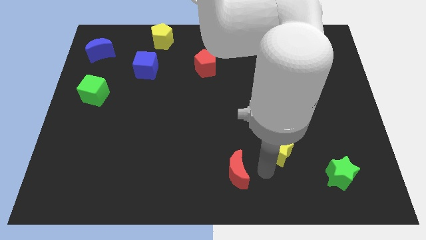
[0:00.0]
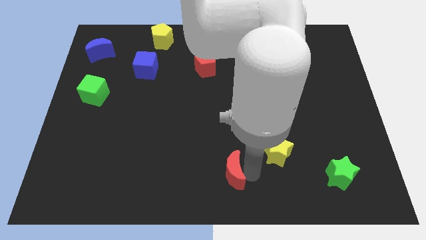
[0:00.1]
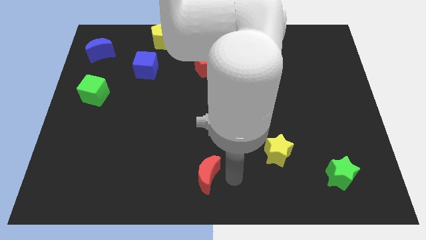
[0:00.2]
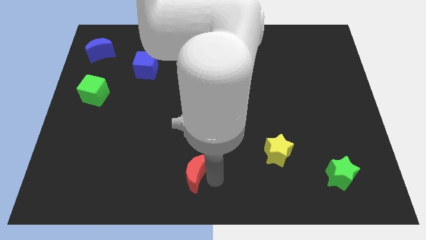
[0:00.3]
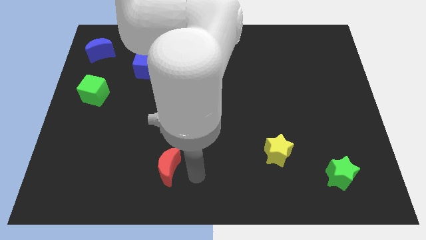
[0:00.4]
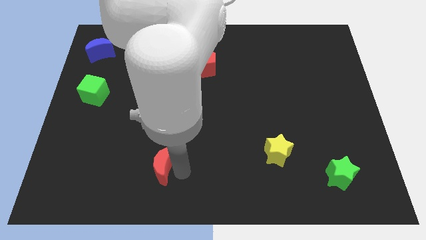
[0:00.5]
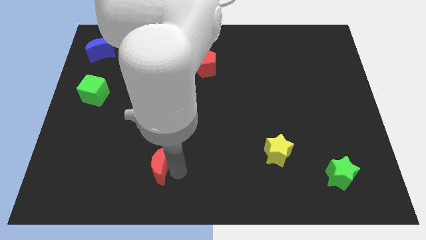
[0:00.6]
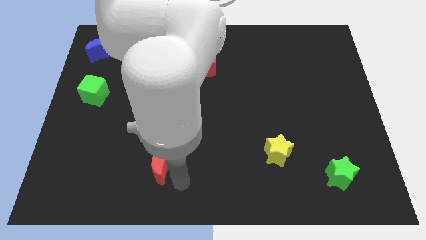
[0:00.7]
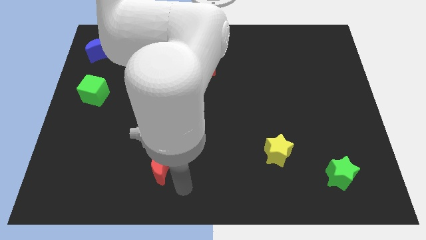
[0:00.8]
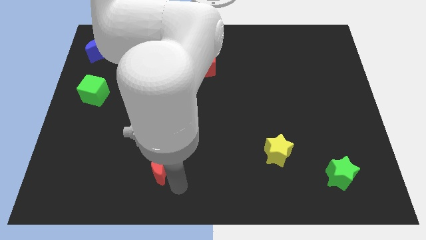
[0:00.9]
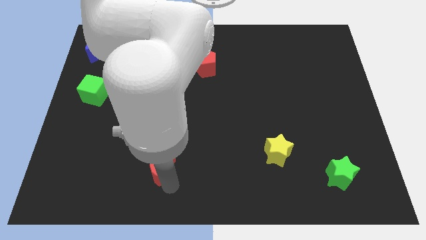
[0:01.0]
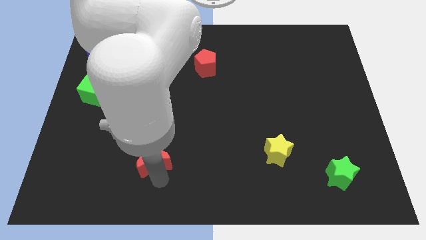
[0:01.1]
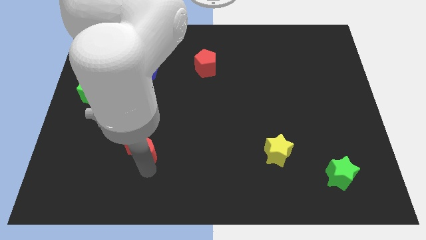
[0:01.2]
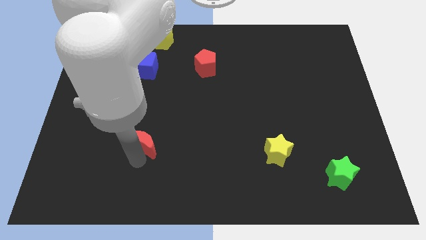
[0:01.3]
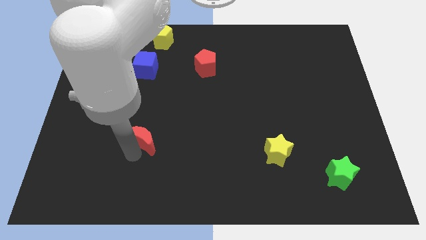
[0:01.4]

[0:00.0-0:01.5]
push the red moon slightly to the left of the board

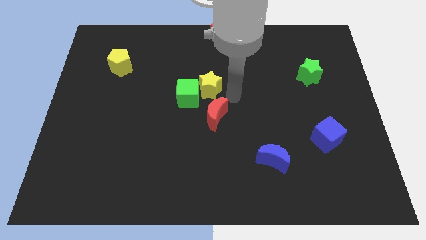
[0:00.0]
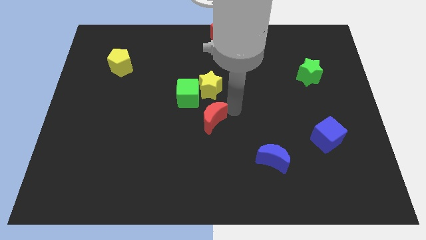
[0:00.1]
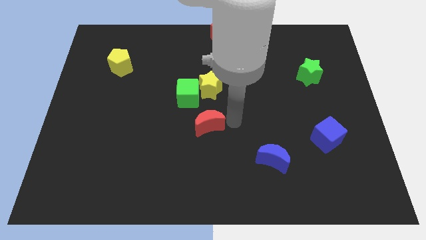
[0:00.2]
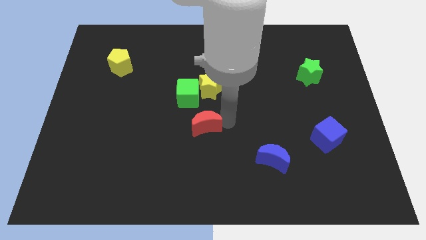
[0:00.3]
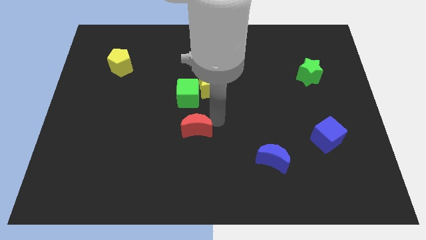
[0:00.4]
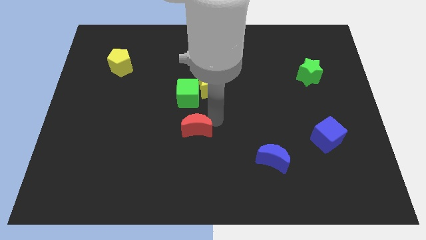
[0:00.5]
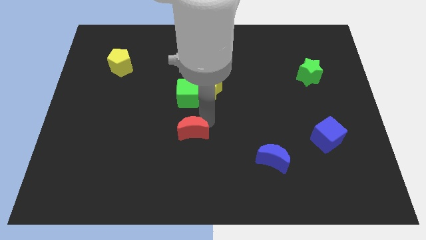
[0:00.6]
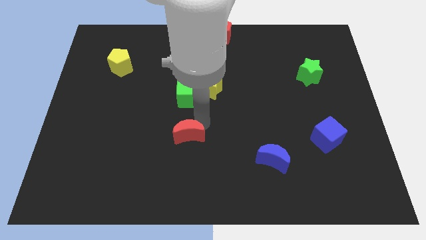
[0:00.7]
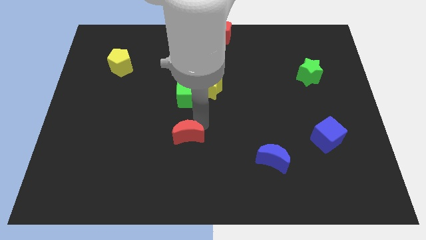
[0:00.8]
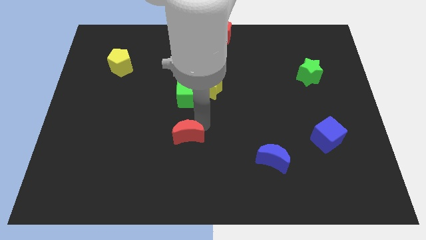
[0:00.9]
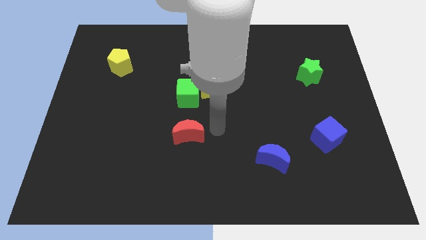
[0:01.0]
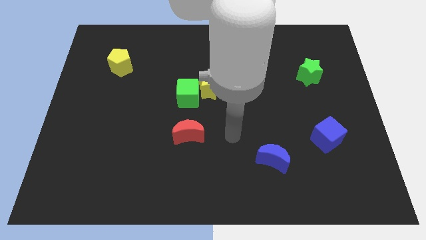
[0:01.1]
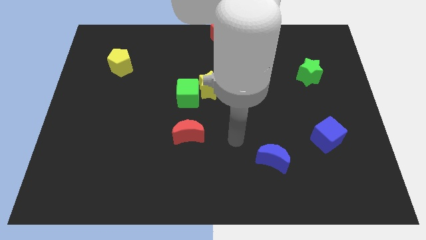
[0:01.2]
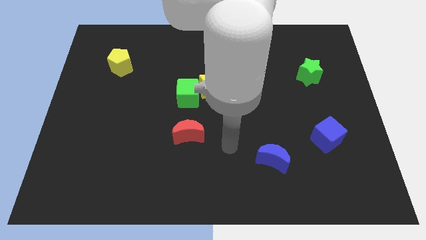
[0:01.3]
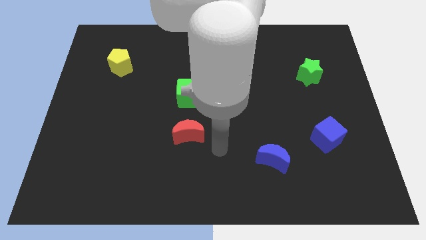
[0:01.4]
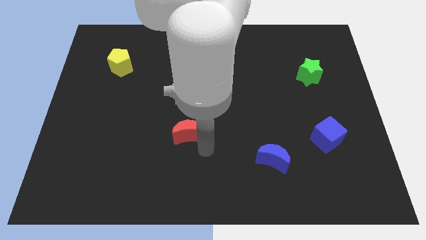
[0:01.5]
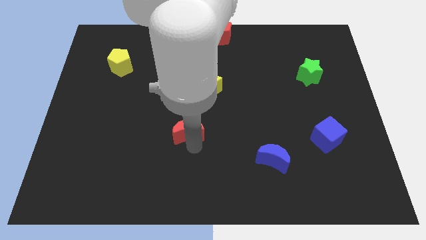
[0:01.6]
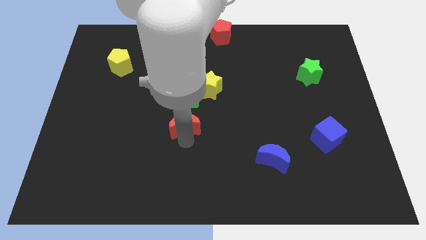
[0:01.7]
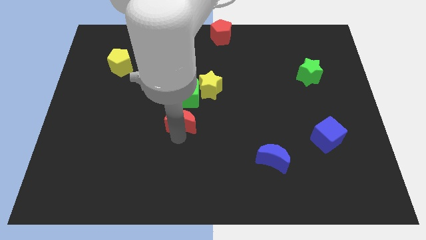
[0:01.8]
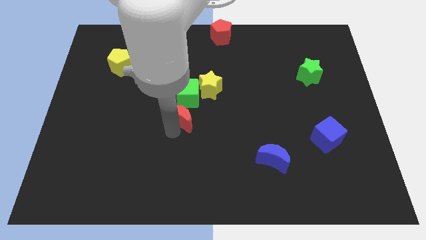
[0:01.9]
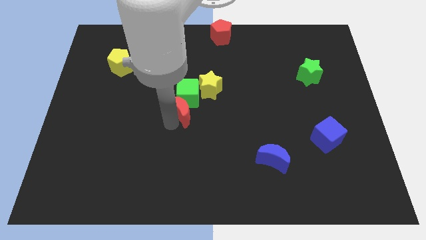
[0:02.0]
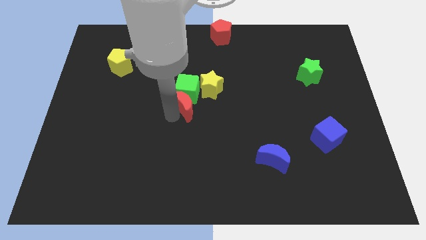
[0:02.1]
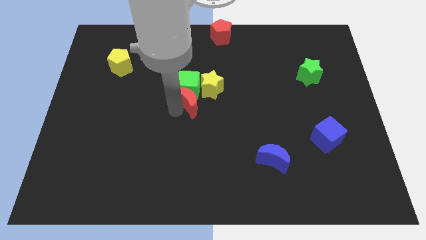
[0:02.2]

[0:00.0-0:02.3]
move the red moon below into the green cube

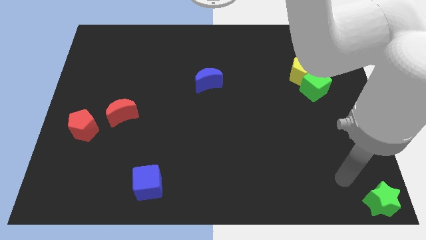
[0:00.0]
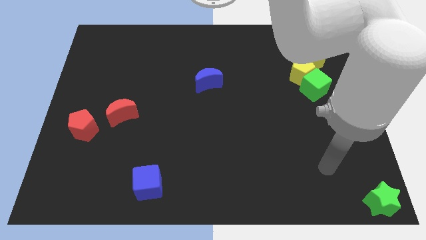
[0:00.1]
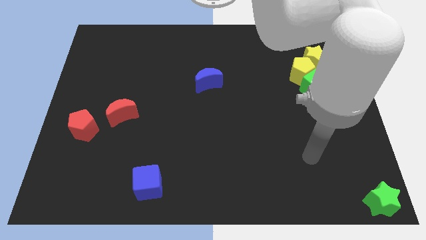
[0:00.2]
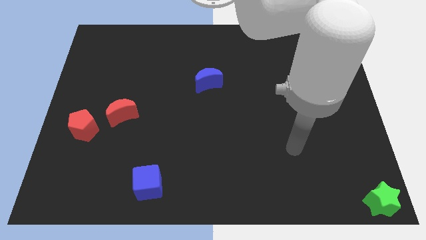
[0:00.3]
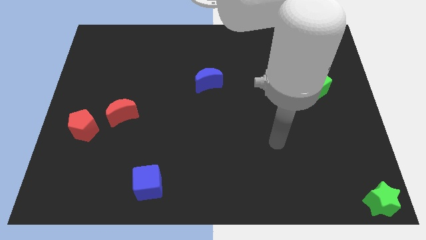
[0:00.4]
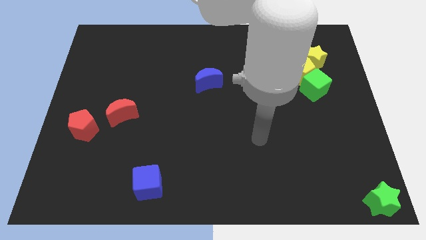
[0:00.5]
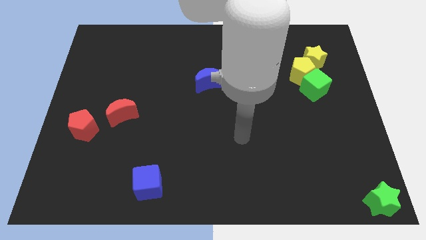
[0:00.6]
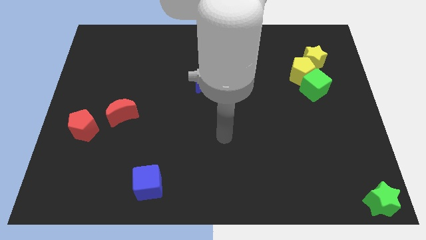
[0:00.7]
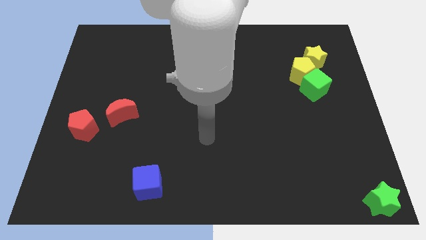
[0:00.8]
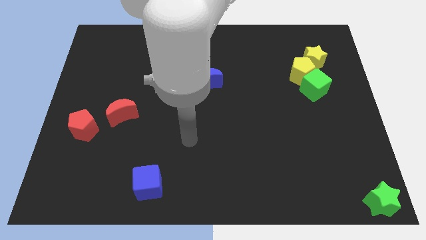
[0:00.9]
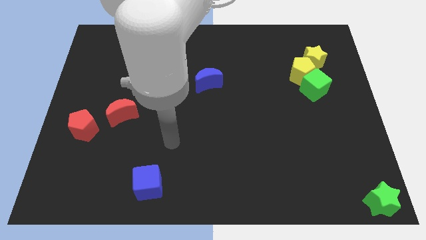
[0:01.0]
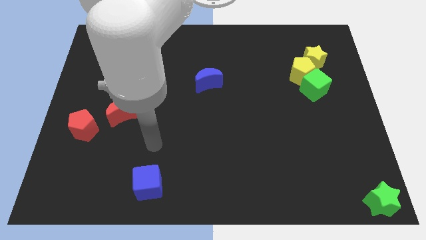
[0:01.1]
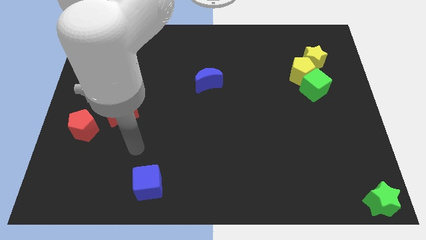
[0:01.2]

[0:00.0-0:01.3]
point the arm above the blue cube

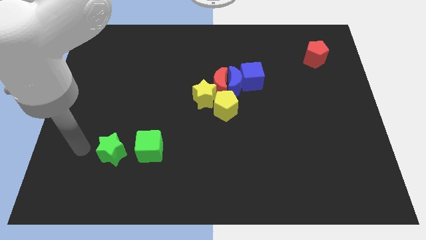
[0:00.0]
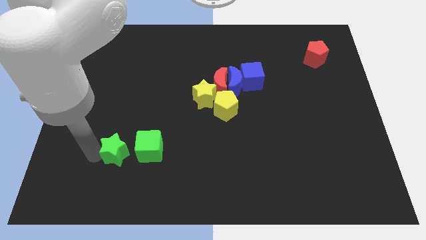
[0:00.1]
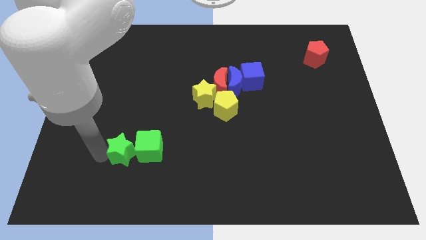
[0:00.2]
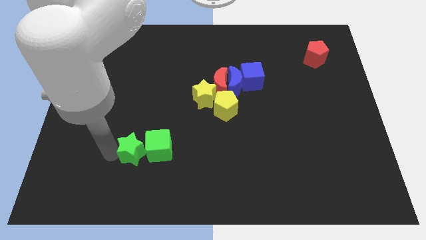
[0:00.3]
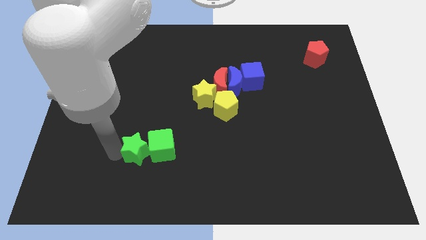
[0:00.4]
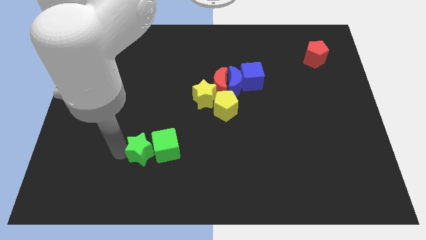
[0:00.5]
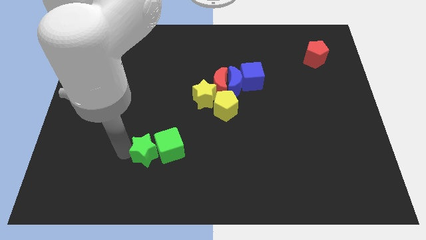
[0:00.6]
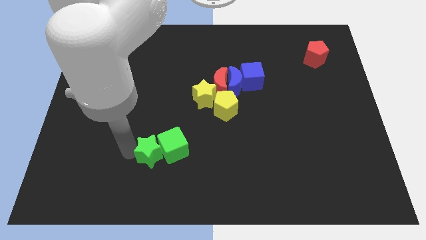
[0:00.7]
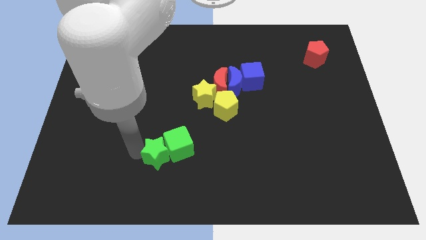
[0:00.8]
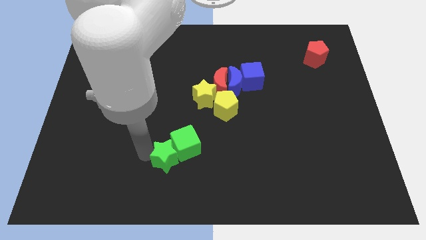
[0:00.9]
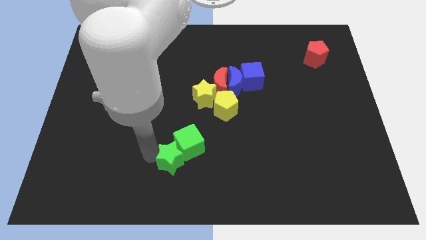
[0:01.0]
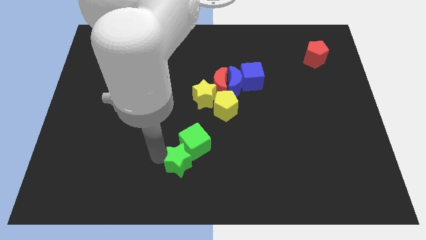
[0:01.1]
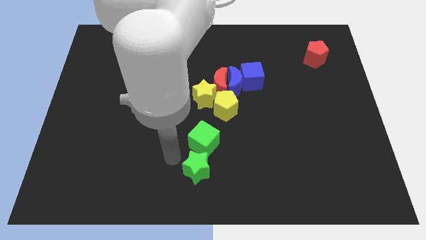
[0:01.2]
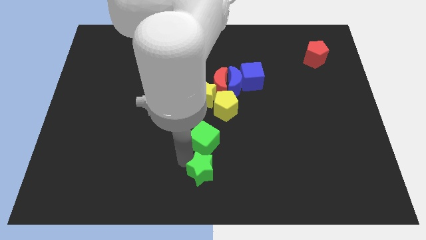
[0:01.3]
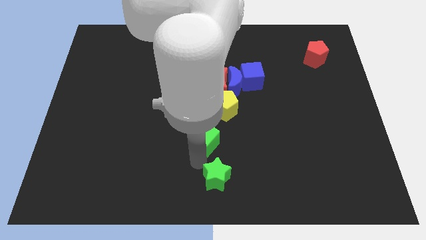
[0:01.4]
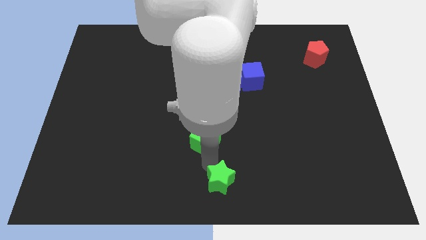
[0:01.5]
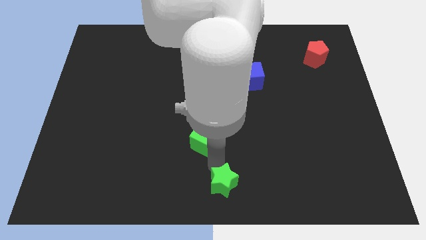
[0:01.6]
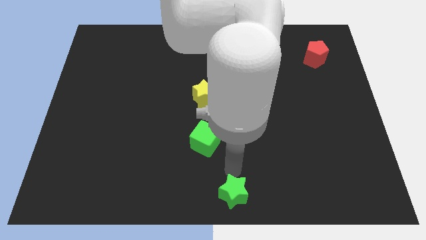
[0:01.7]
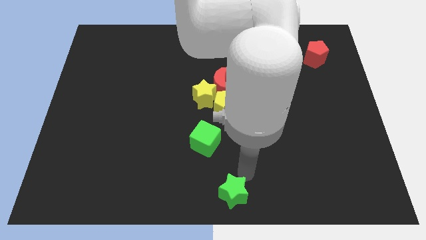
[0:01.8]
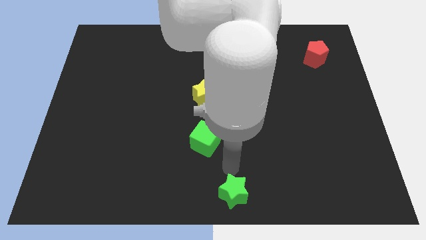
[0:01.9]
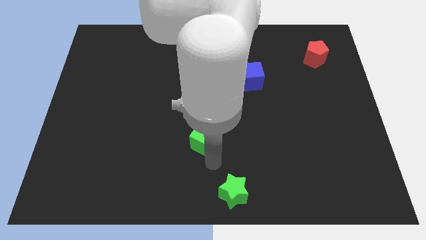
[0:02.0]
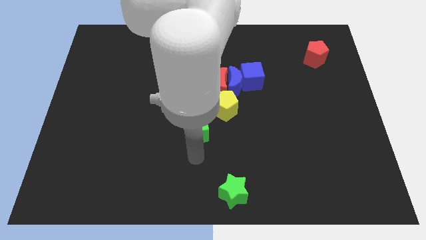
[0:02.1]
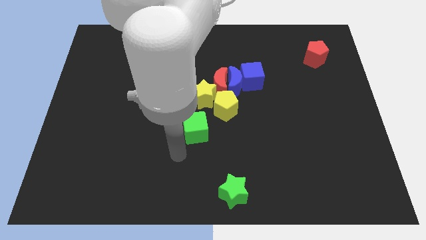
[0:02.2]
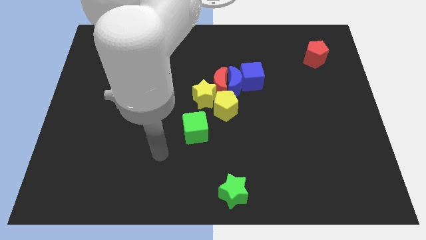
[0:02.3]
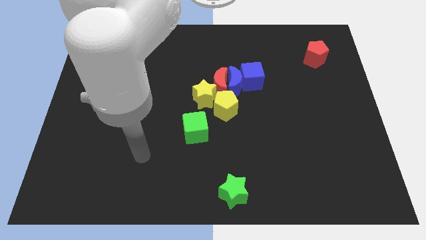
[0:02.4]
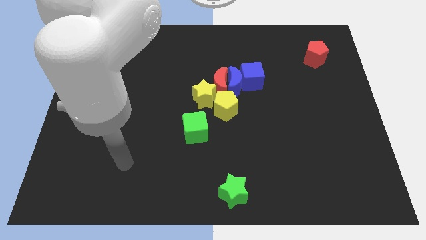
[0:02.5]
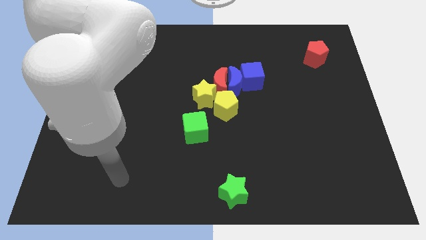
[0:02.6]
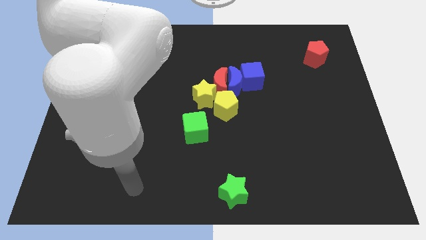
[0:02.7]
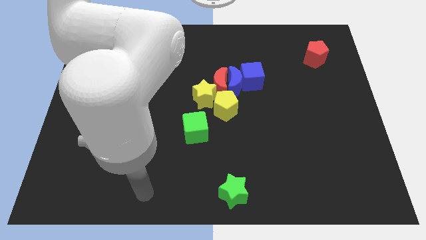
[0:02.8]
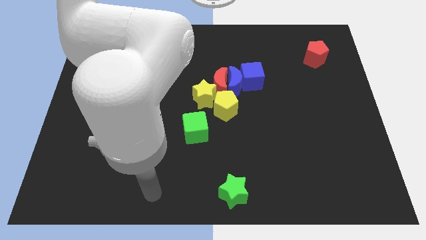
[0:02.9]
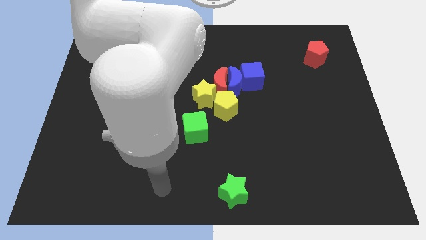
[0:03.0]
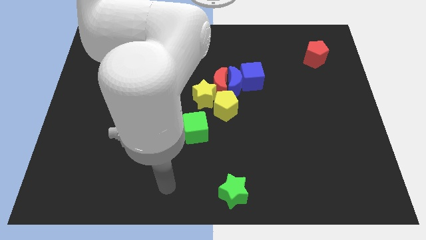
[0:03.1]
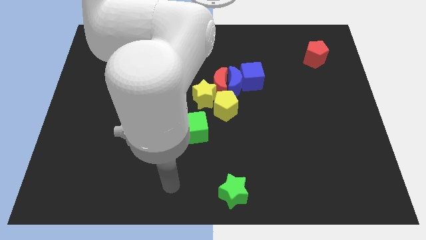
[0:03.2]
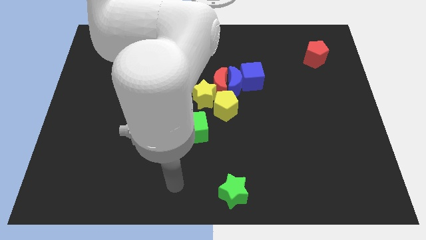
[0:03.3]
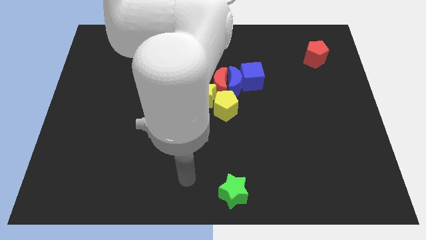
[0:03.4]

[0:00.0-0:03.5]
separate the green cube and green star

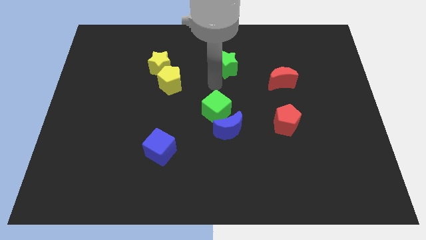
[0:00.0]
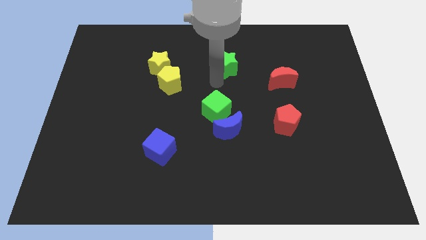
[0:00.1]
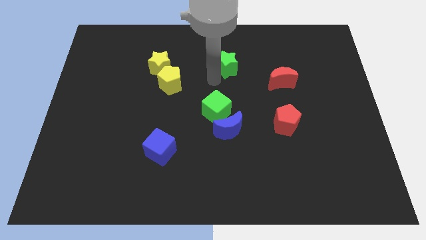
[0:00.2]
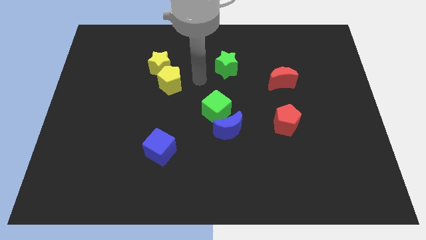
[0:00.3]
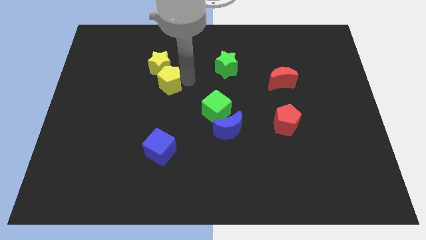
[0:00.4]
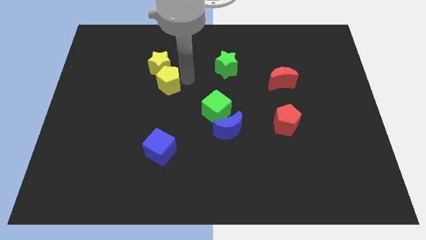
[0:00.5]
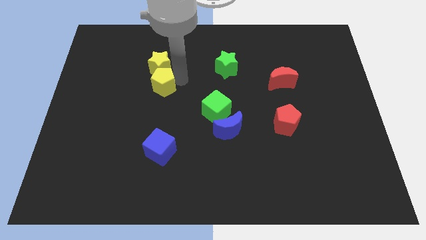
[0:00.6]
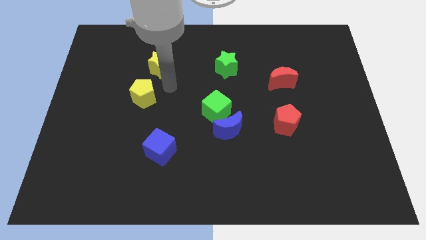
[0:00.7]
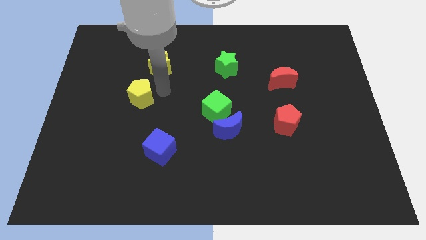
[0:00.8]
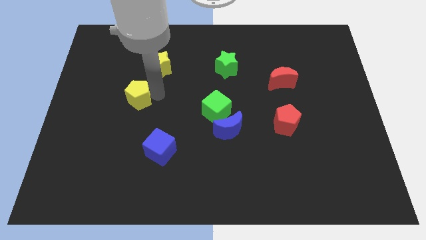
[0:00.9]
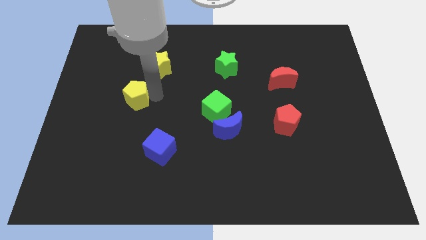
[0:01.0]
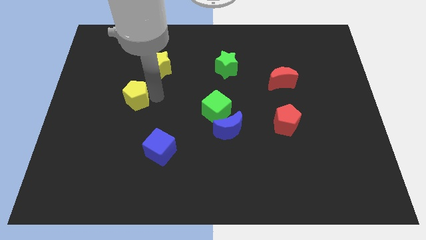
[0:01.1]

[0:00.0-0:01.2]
move yellow pentagon slightly left
